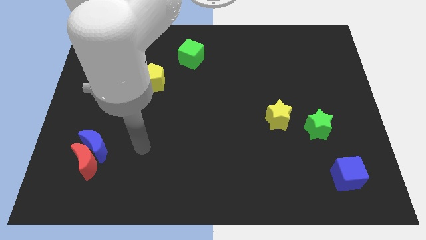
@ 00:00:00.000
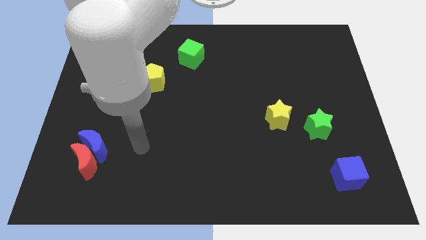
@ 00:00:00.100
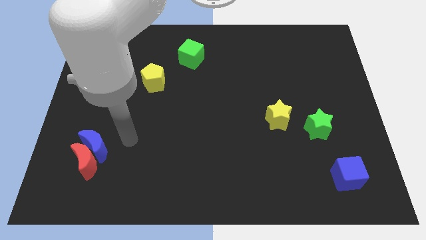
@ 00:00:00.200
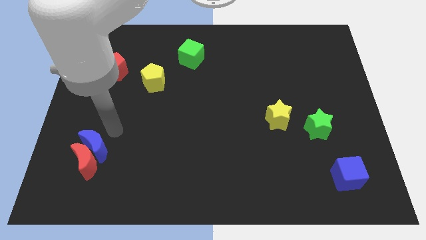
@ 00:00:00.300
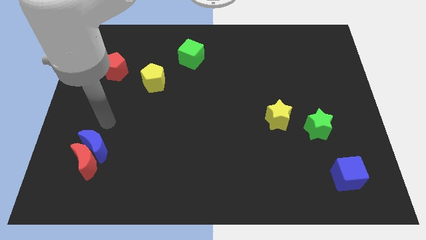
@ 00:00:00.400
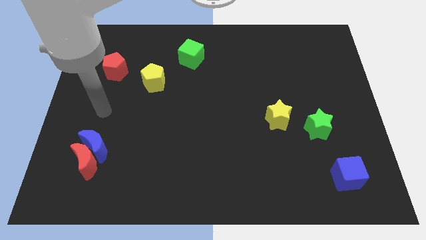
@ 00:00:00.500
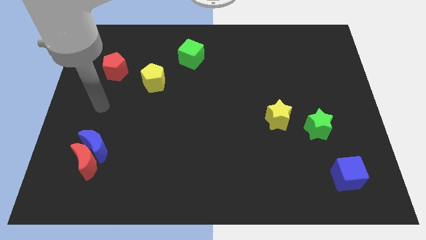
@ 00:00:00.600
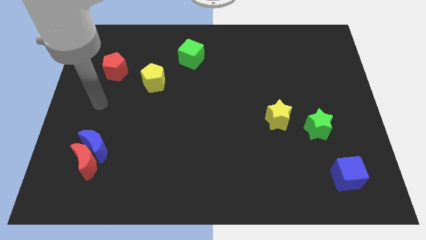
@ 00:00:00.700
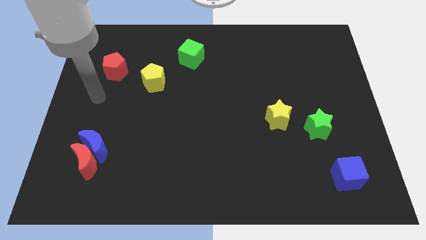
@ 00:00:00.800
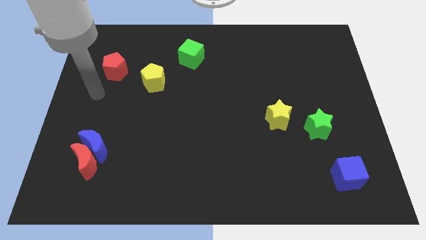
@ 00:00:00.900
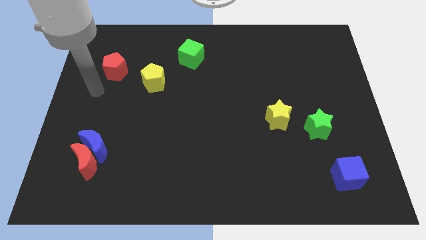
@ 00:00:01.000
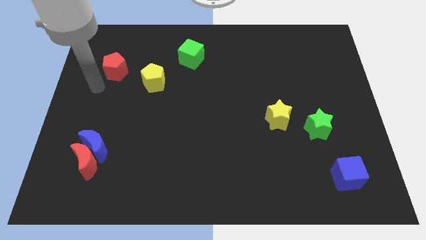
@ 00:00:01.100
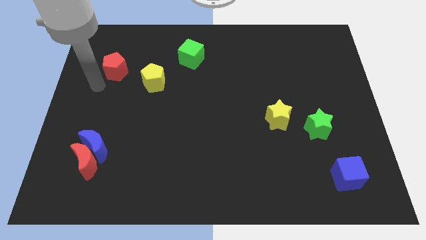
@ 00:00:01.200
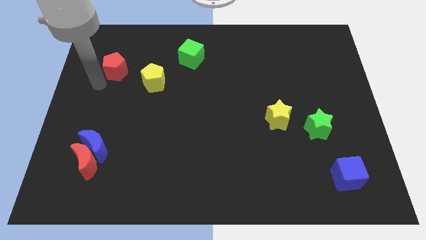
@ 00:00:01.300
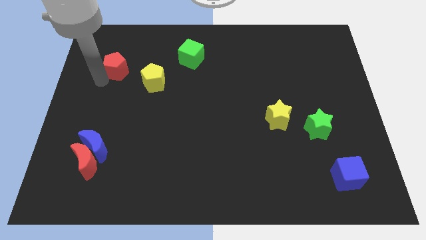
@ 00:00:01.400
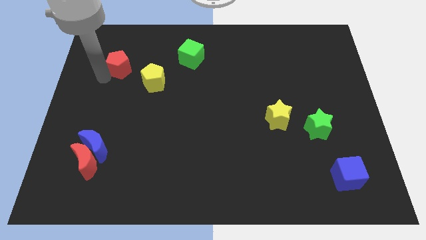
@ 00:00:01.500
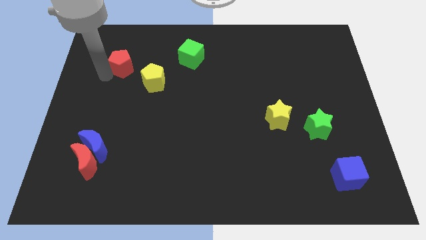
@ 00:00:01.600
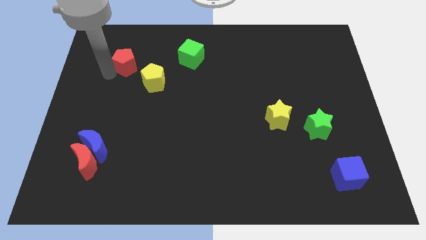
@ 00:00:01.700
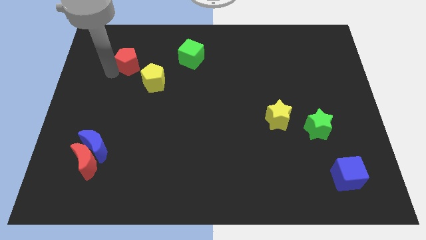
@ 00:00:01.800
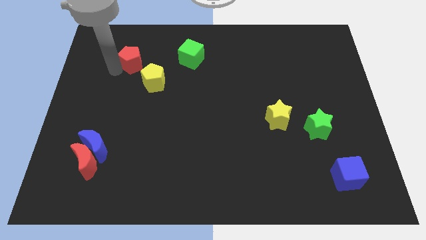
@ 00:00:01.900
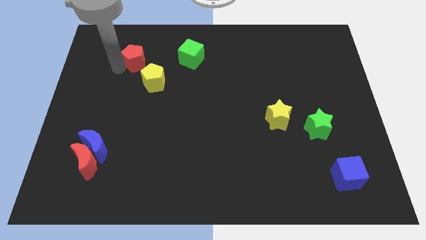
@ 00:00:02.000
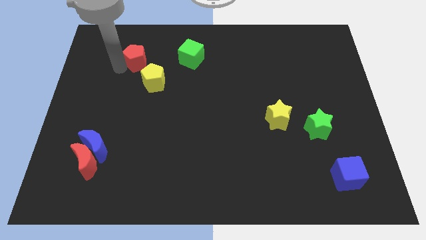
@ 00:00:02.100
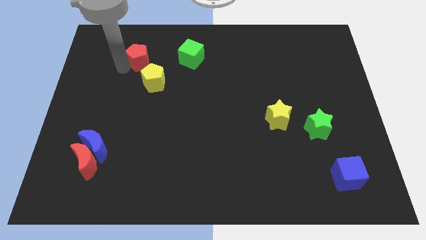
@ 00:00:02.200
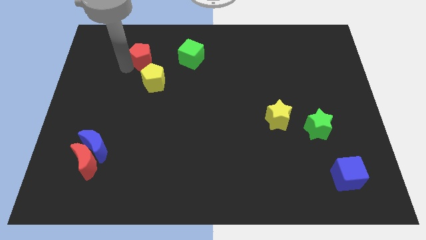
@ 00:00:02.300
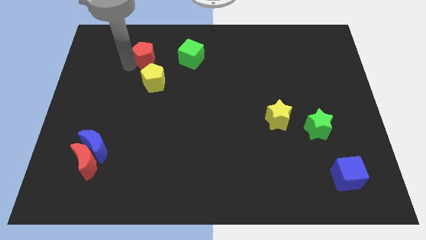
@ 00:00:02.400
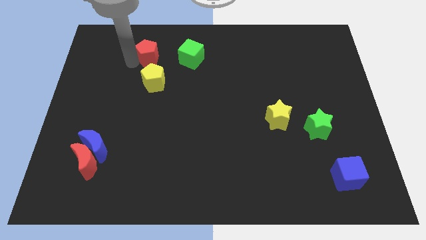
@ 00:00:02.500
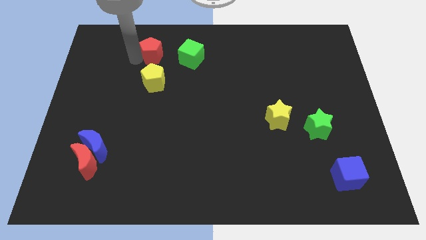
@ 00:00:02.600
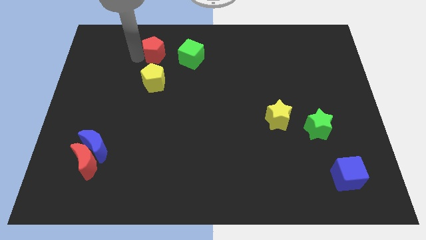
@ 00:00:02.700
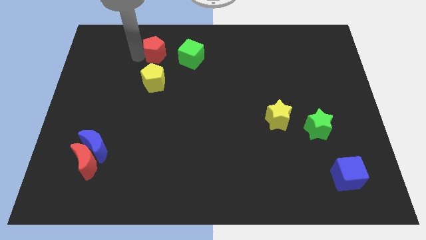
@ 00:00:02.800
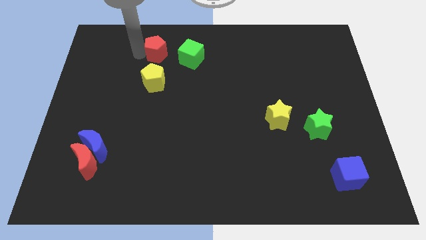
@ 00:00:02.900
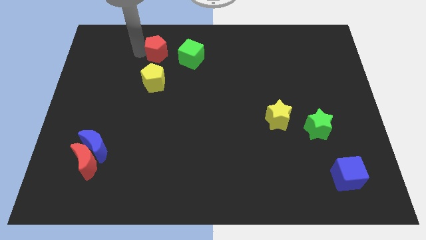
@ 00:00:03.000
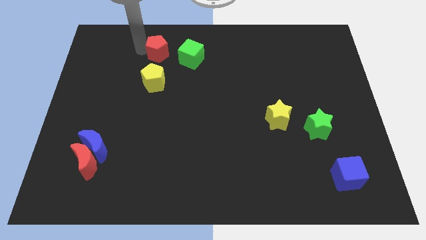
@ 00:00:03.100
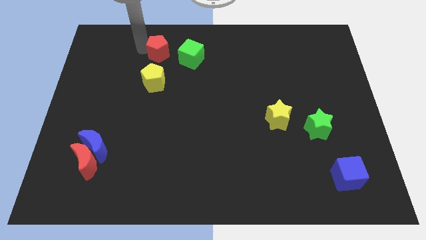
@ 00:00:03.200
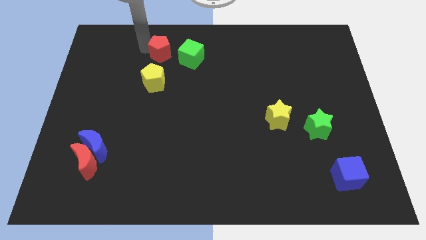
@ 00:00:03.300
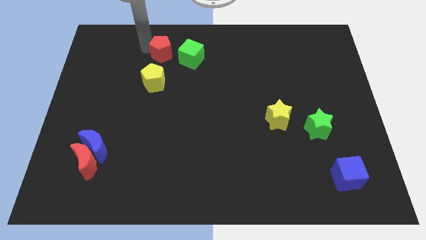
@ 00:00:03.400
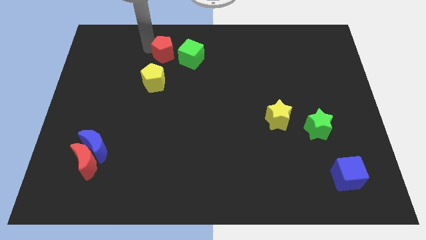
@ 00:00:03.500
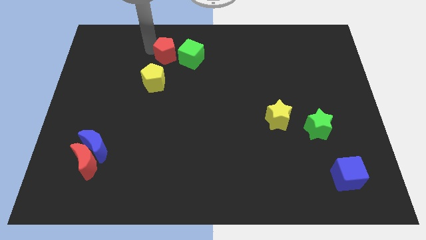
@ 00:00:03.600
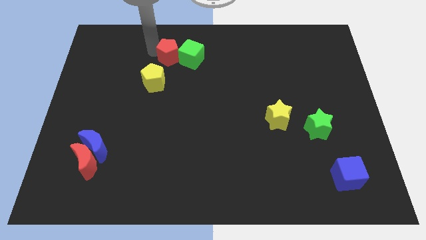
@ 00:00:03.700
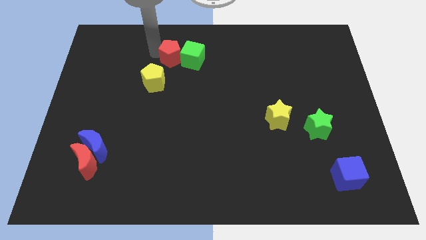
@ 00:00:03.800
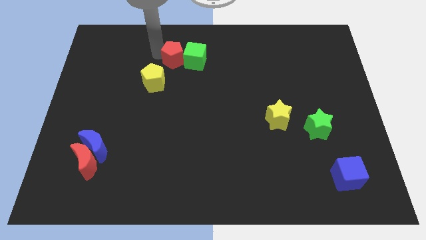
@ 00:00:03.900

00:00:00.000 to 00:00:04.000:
push the red pentagon next to the green cube

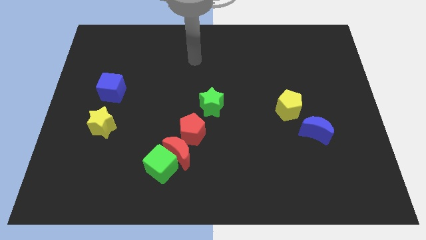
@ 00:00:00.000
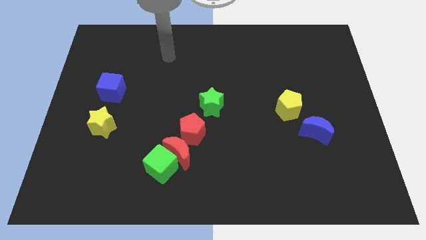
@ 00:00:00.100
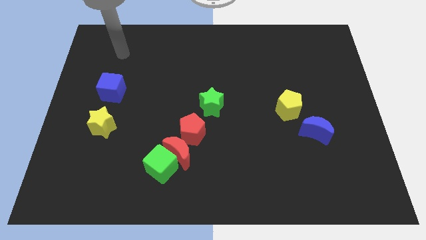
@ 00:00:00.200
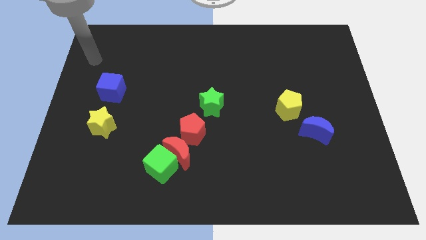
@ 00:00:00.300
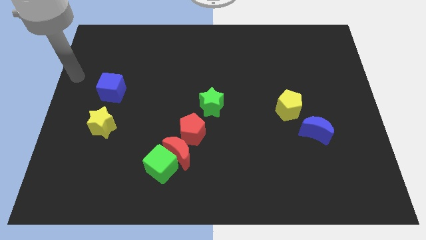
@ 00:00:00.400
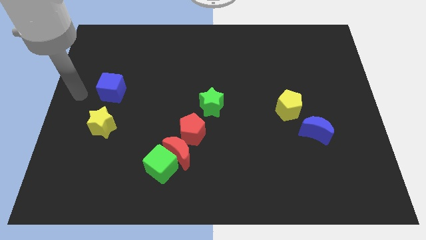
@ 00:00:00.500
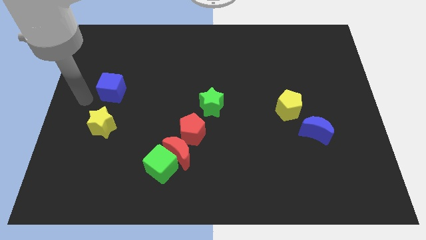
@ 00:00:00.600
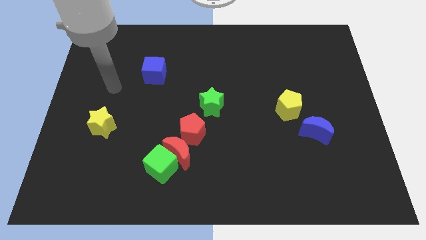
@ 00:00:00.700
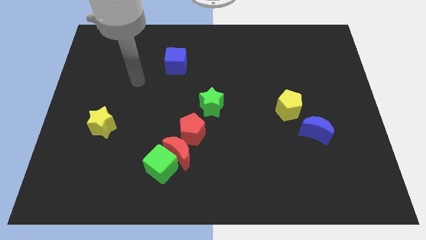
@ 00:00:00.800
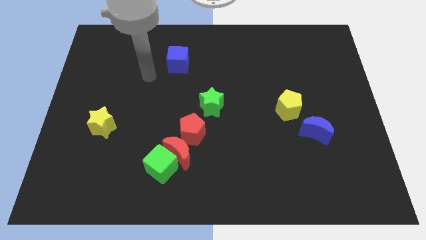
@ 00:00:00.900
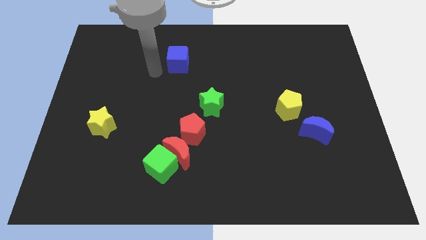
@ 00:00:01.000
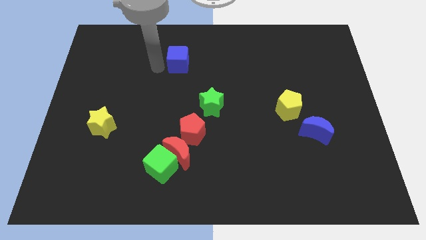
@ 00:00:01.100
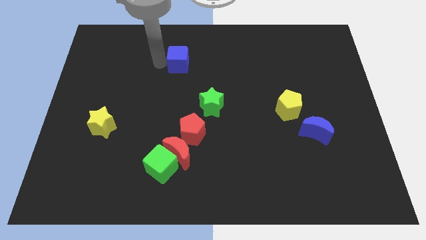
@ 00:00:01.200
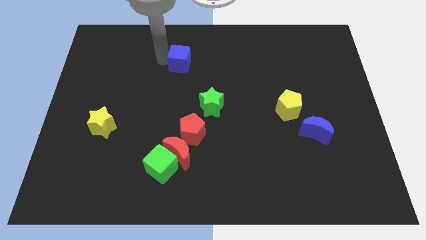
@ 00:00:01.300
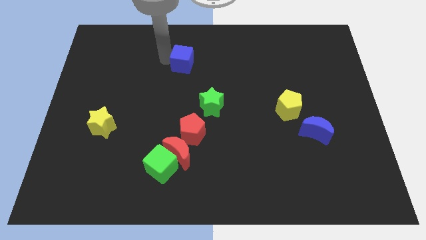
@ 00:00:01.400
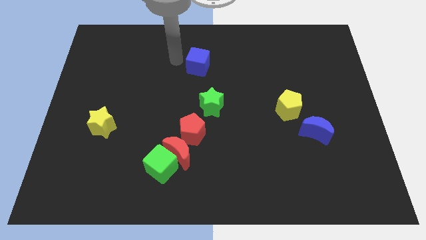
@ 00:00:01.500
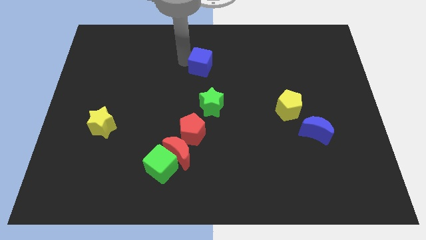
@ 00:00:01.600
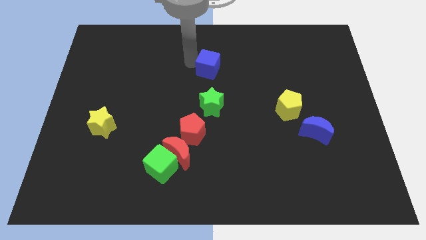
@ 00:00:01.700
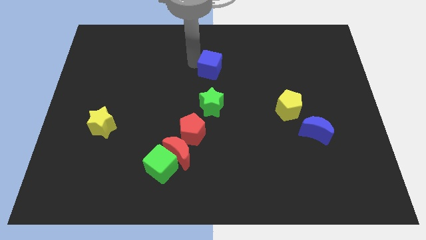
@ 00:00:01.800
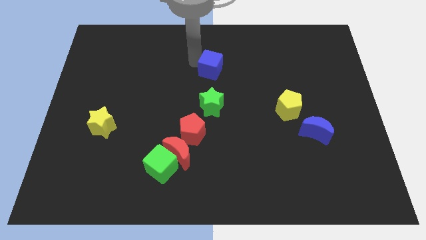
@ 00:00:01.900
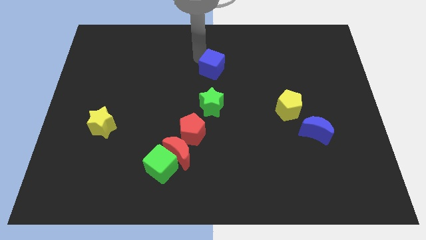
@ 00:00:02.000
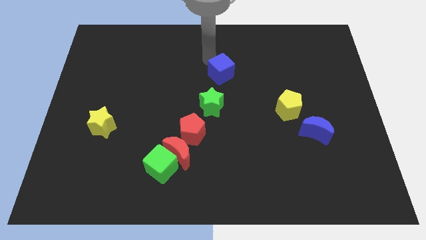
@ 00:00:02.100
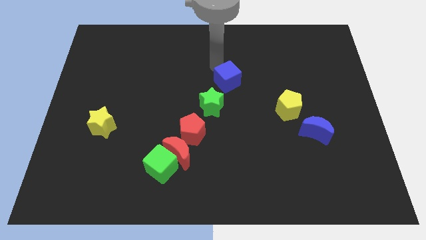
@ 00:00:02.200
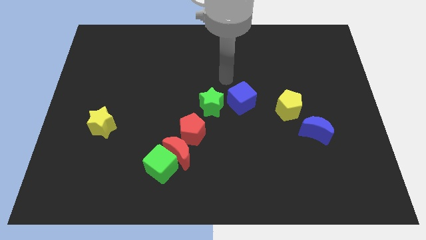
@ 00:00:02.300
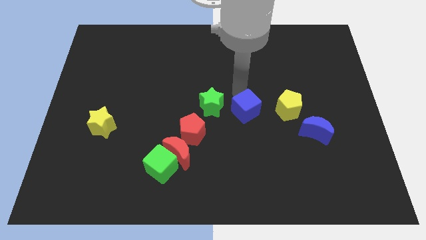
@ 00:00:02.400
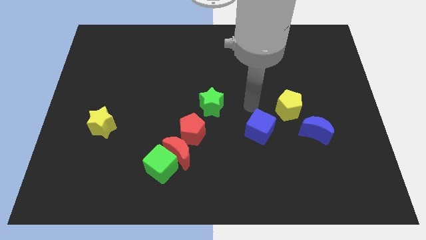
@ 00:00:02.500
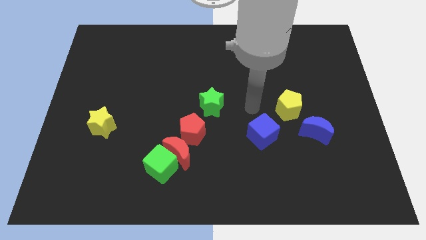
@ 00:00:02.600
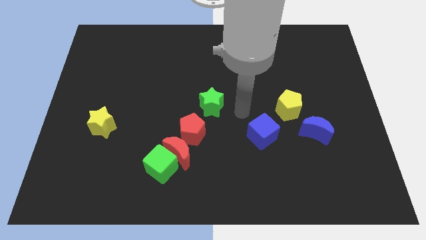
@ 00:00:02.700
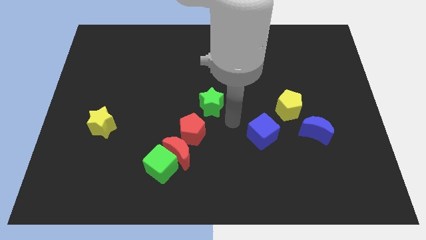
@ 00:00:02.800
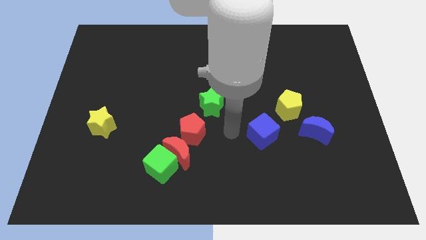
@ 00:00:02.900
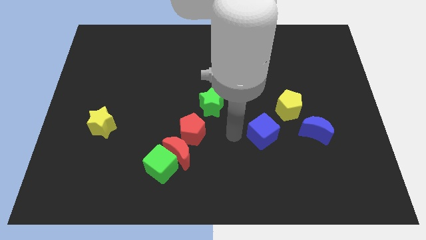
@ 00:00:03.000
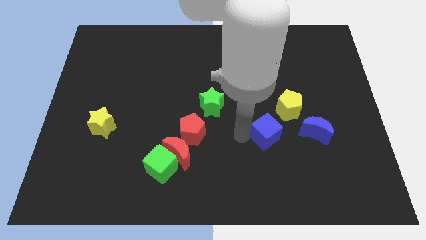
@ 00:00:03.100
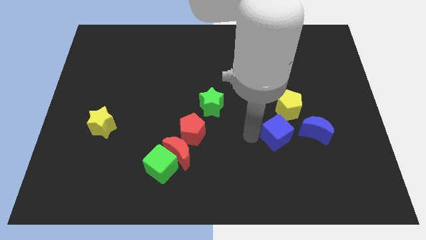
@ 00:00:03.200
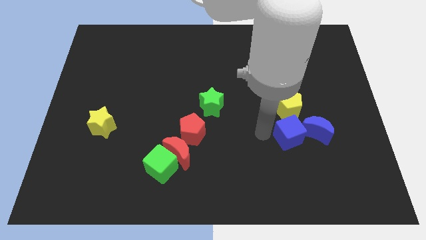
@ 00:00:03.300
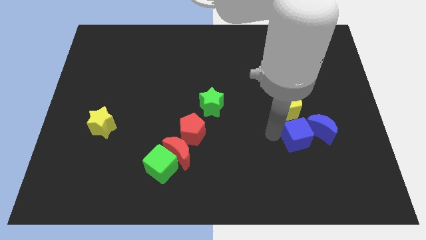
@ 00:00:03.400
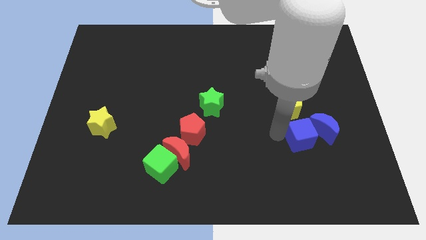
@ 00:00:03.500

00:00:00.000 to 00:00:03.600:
move the blue cube towards the blue moon

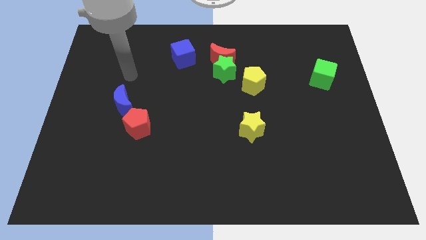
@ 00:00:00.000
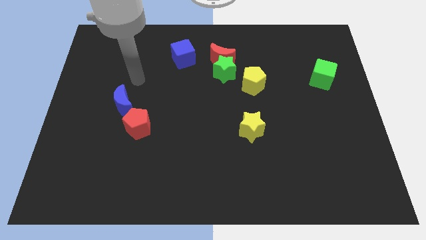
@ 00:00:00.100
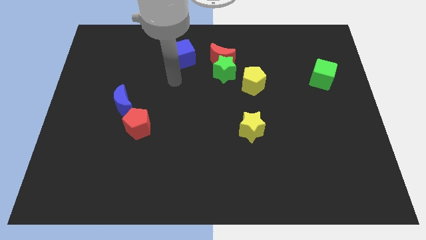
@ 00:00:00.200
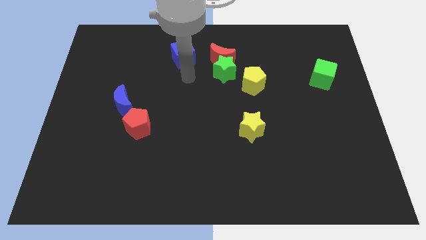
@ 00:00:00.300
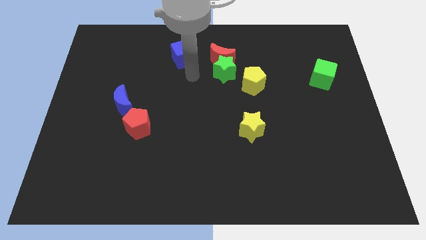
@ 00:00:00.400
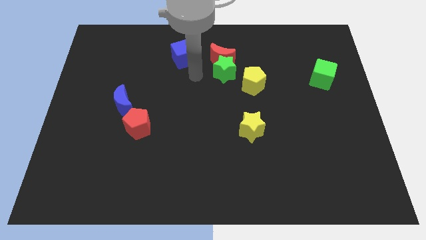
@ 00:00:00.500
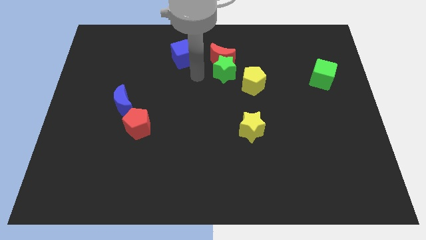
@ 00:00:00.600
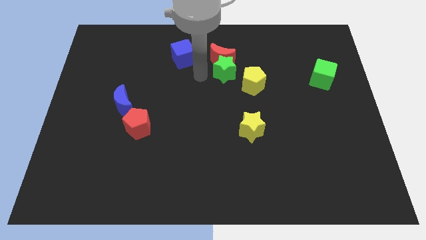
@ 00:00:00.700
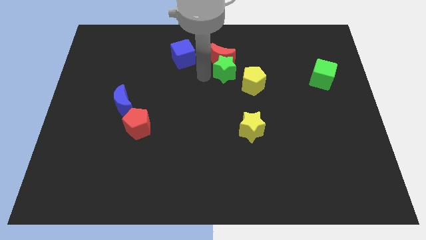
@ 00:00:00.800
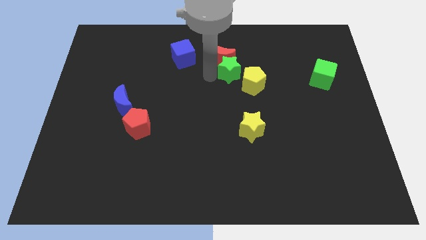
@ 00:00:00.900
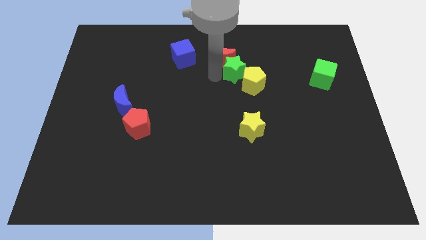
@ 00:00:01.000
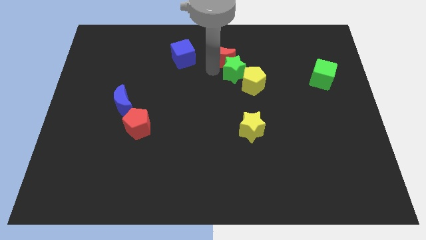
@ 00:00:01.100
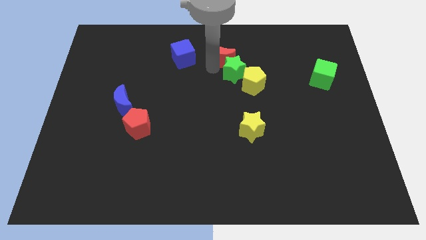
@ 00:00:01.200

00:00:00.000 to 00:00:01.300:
move the green star close to the yellow pentagon
